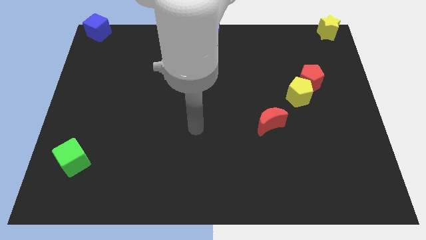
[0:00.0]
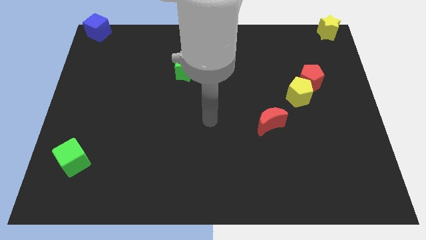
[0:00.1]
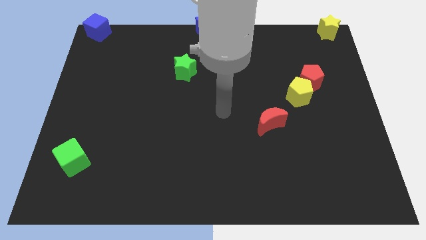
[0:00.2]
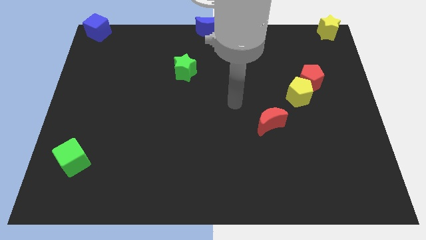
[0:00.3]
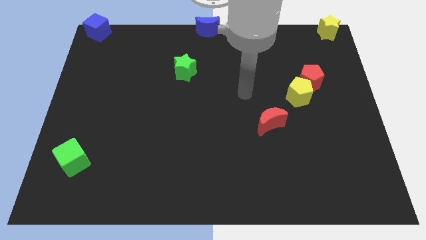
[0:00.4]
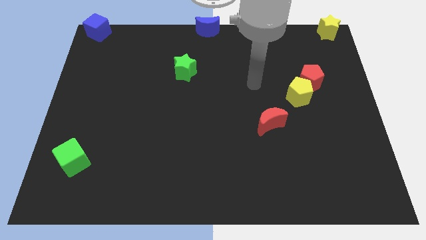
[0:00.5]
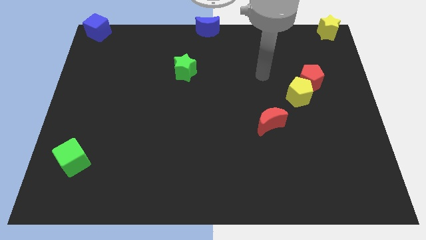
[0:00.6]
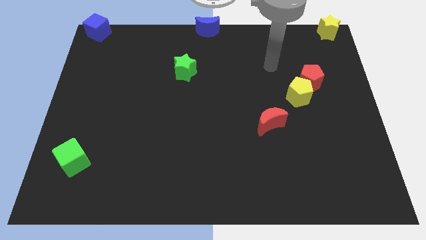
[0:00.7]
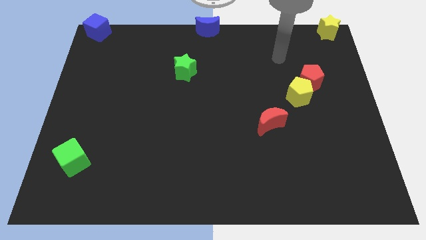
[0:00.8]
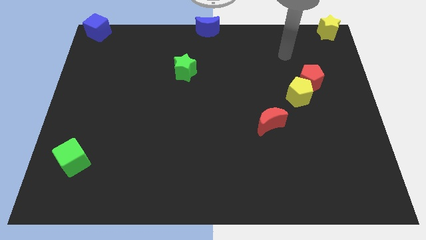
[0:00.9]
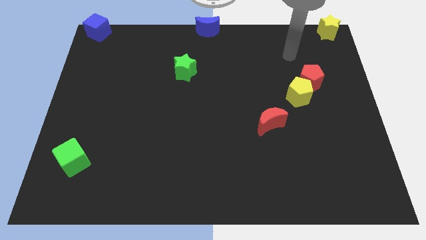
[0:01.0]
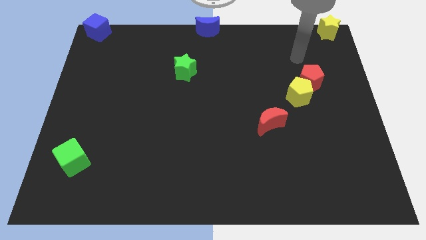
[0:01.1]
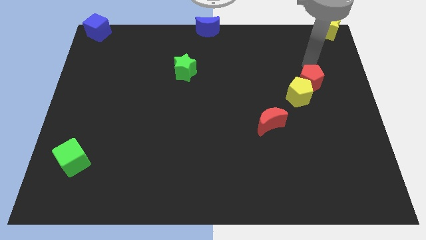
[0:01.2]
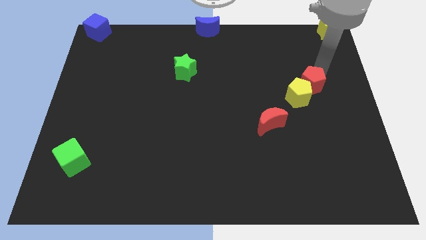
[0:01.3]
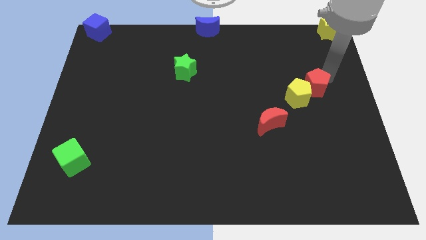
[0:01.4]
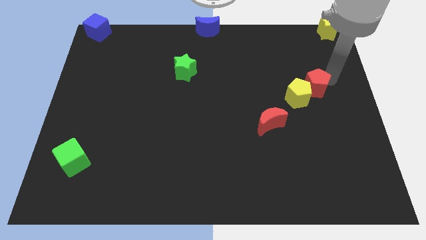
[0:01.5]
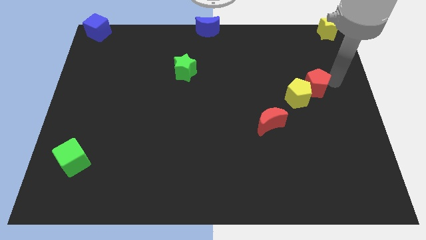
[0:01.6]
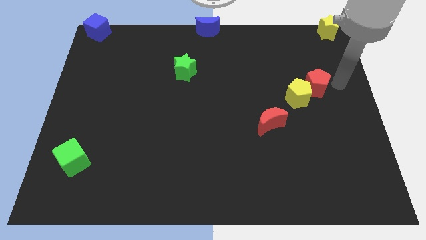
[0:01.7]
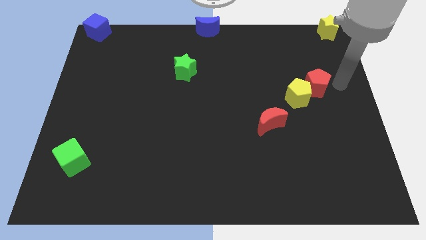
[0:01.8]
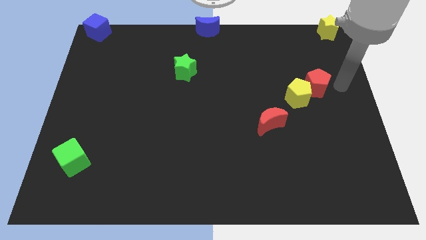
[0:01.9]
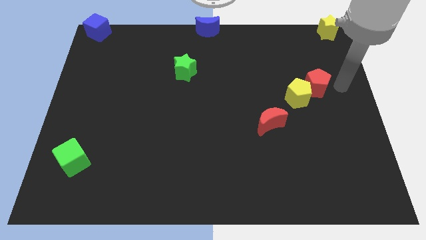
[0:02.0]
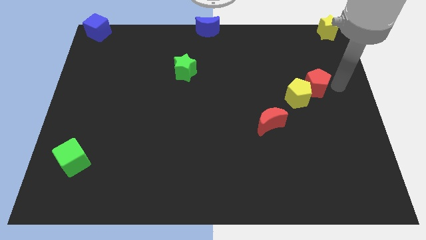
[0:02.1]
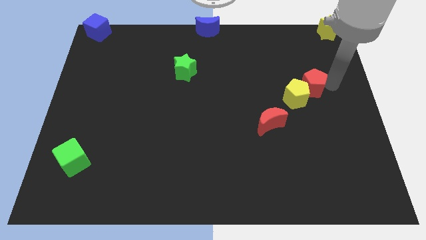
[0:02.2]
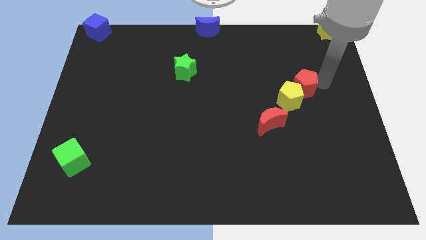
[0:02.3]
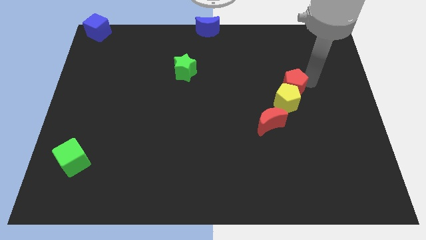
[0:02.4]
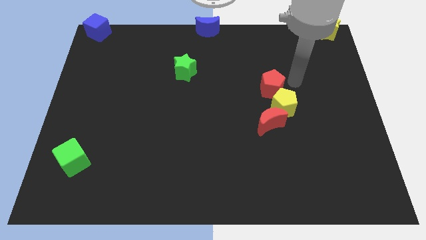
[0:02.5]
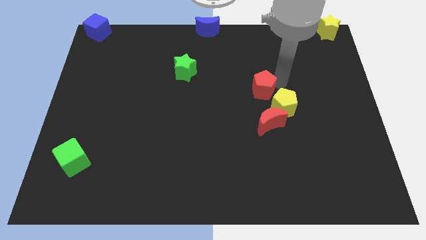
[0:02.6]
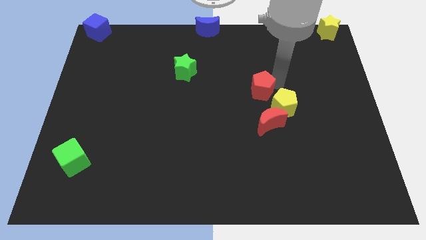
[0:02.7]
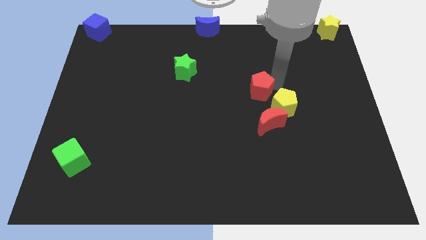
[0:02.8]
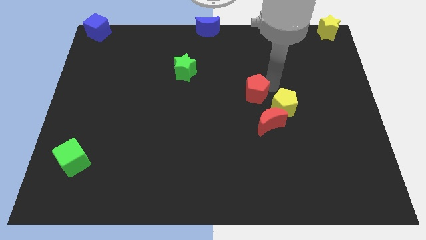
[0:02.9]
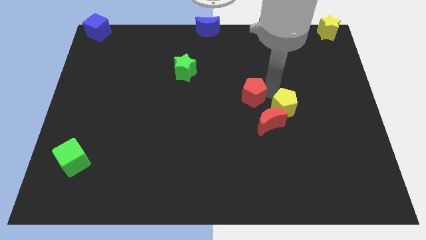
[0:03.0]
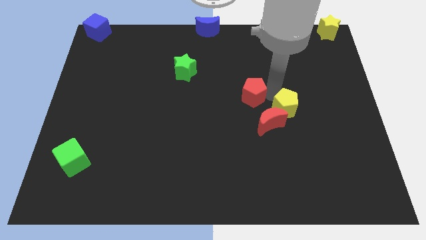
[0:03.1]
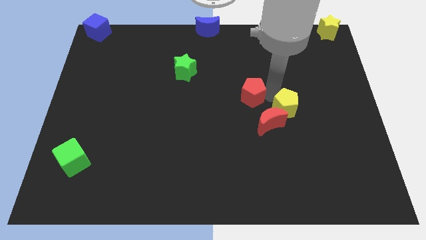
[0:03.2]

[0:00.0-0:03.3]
slide the red pentagon to the top left side of the red crescent and yellow pentagon

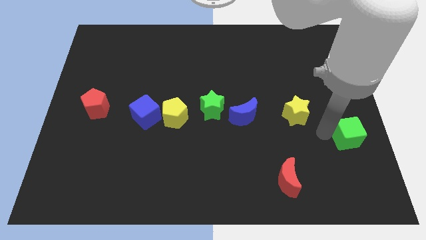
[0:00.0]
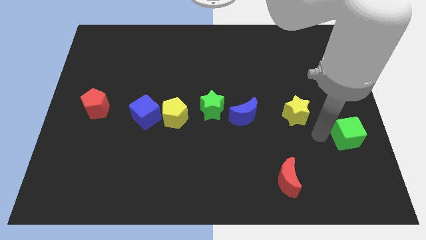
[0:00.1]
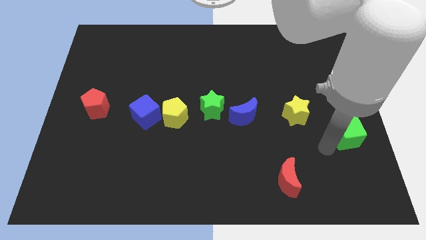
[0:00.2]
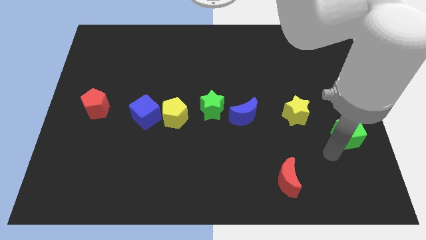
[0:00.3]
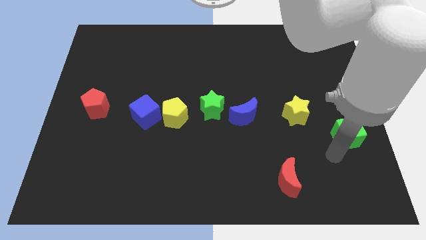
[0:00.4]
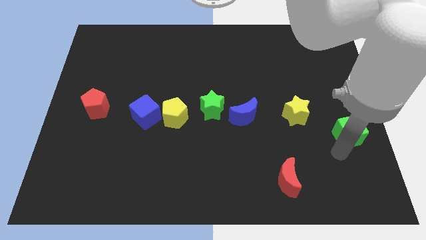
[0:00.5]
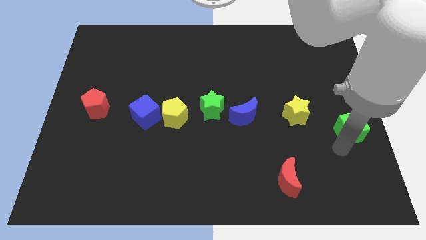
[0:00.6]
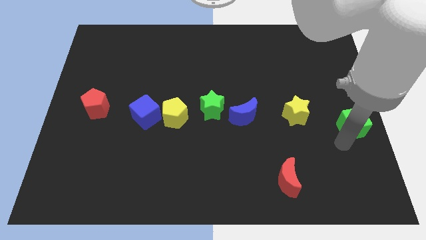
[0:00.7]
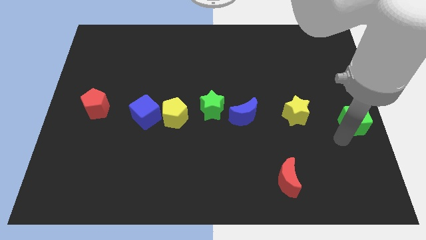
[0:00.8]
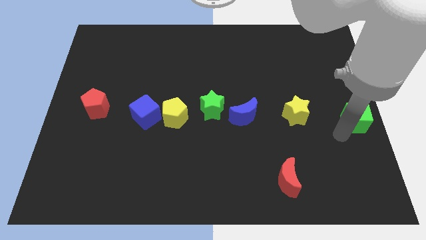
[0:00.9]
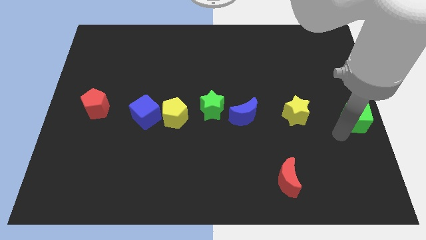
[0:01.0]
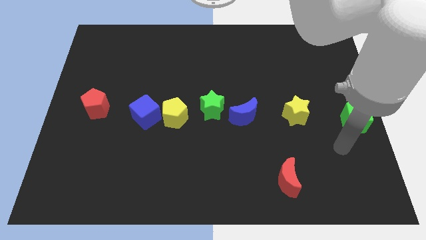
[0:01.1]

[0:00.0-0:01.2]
place the green cube right to the yellow star

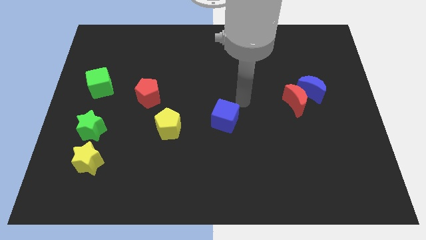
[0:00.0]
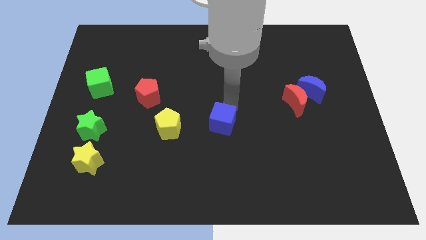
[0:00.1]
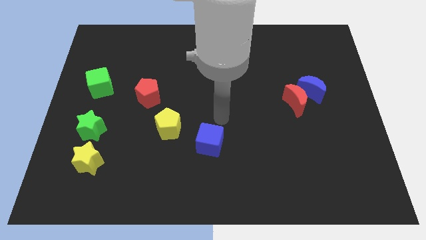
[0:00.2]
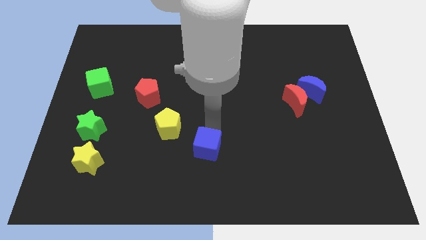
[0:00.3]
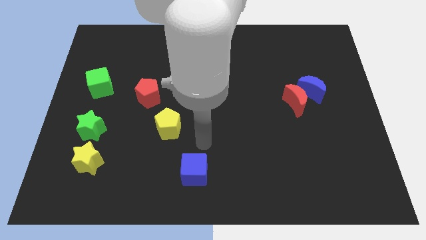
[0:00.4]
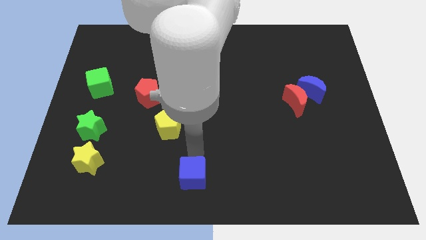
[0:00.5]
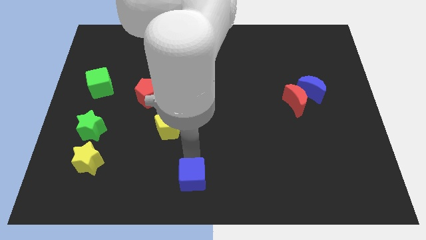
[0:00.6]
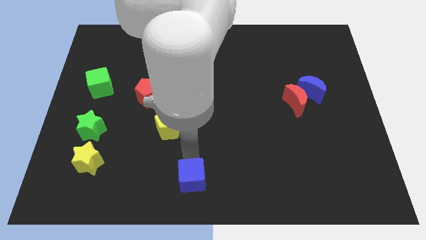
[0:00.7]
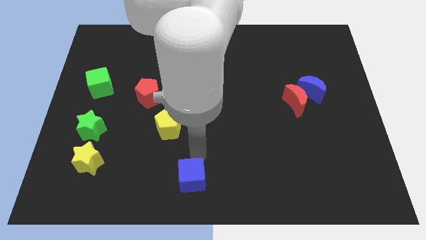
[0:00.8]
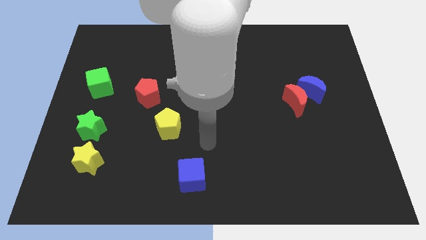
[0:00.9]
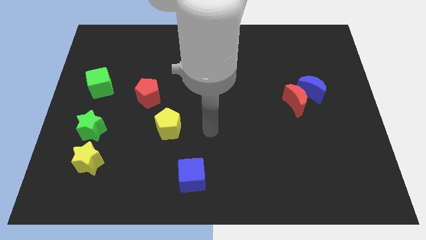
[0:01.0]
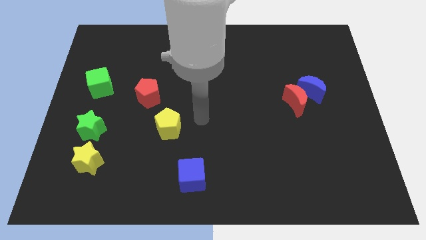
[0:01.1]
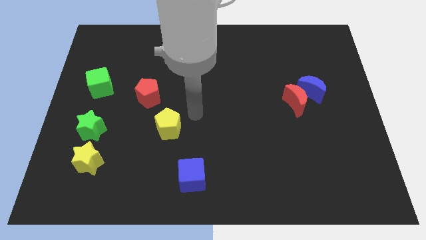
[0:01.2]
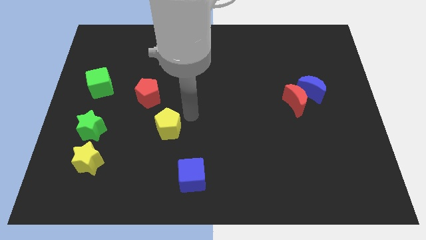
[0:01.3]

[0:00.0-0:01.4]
put the blue cube down to make parallel line

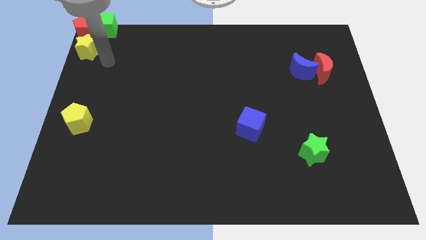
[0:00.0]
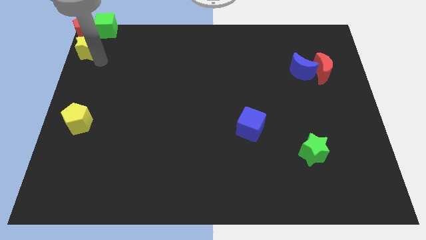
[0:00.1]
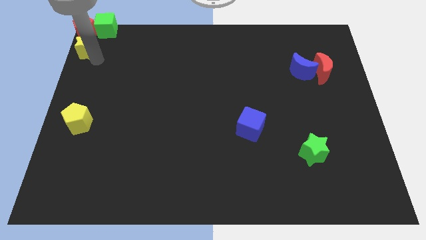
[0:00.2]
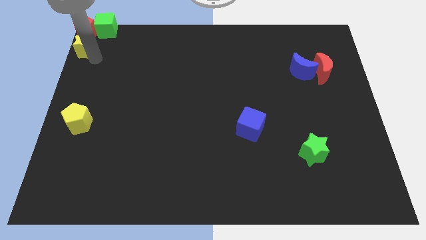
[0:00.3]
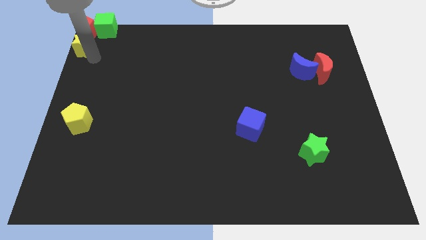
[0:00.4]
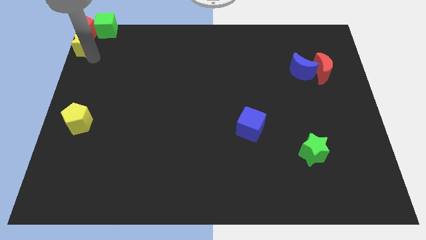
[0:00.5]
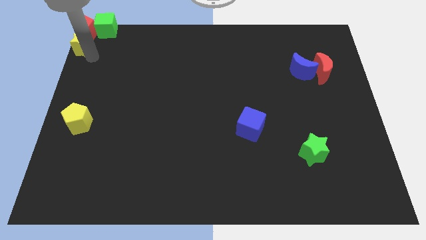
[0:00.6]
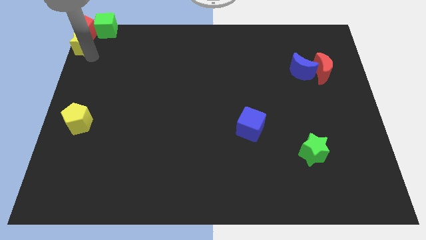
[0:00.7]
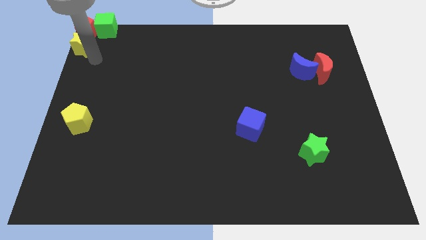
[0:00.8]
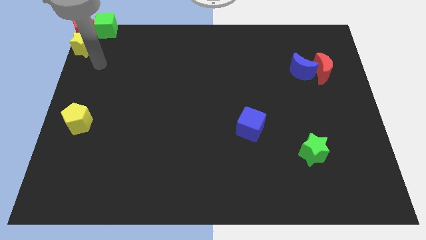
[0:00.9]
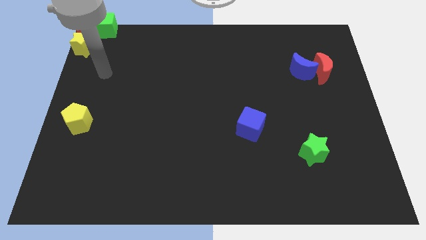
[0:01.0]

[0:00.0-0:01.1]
push the yellow star to the bottom of the red pentagon

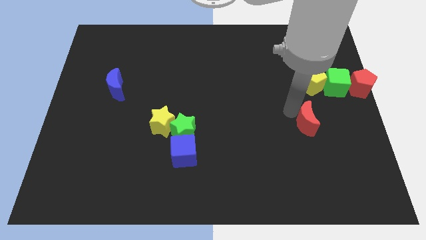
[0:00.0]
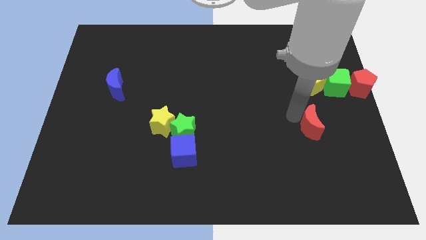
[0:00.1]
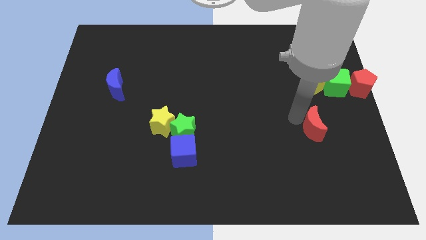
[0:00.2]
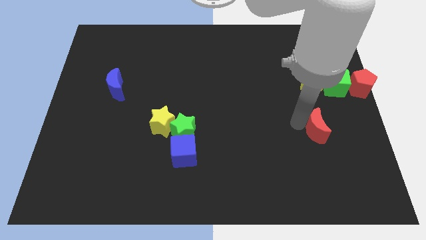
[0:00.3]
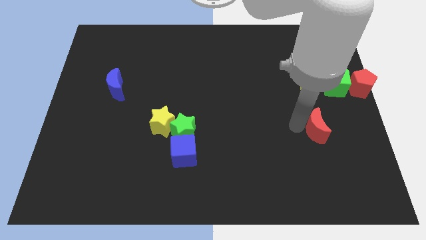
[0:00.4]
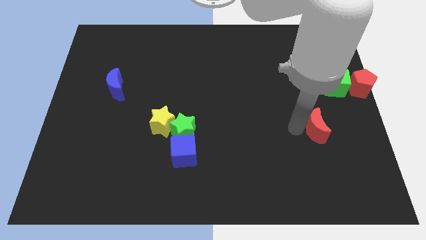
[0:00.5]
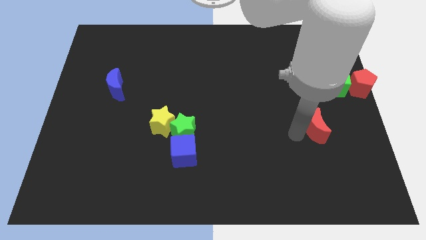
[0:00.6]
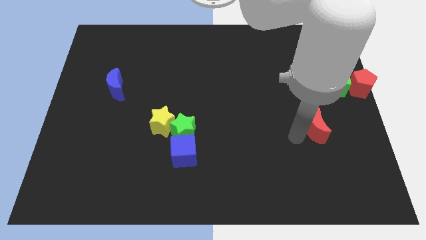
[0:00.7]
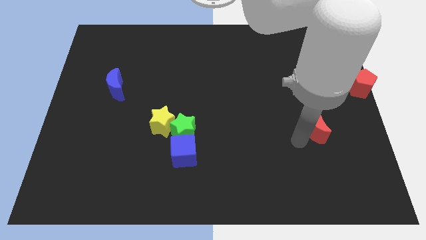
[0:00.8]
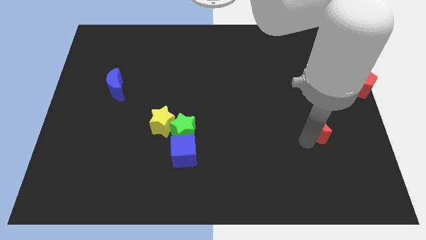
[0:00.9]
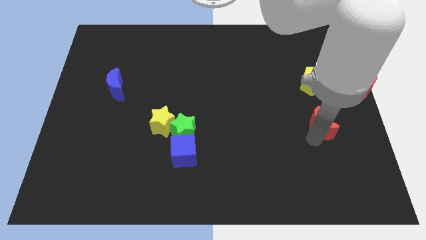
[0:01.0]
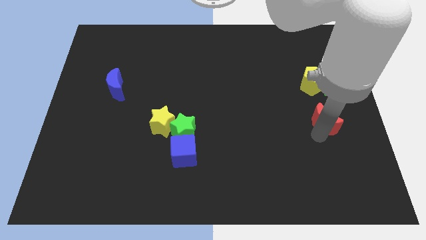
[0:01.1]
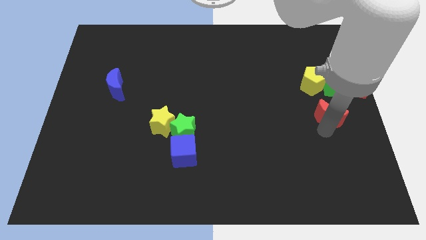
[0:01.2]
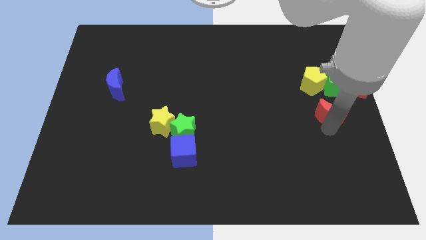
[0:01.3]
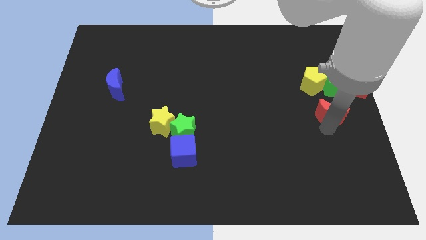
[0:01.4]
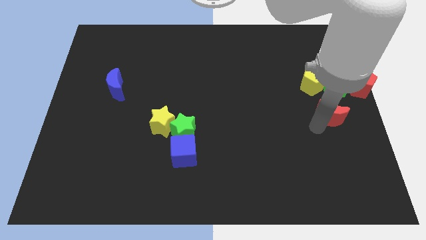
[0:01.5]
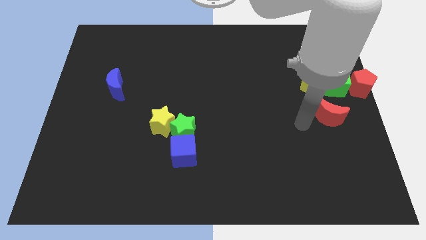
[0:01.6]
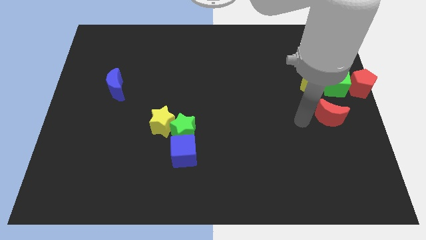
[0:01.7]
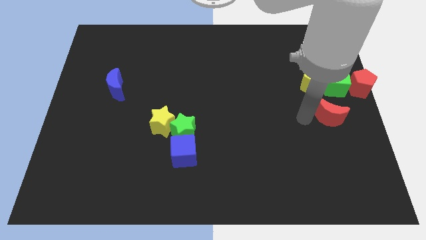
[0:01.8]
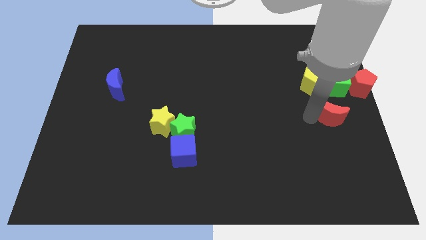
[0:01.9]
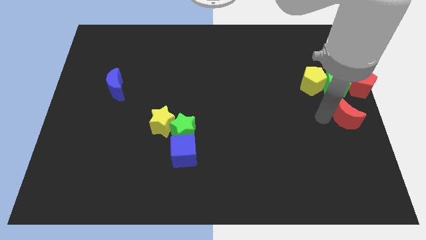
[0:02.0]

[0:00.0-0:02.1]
move the red crescent below the red pentagon
